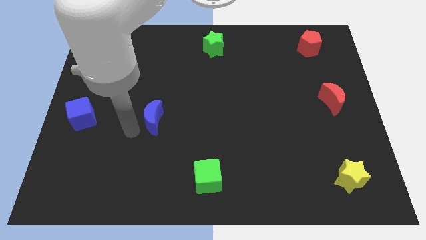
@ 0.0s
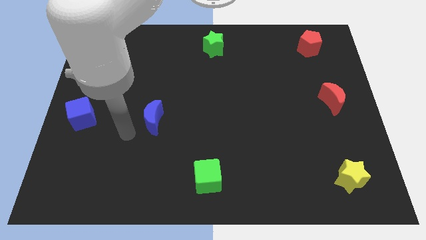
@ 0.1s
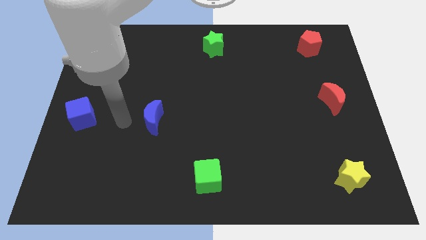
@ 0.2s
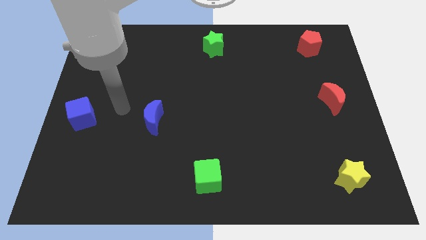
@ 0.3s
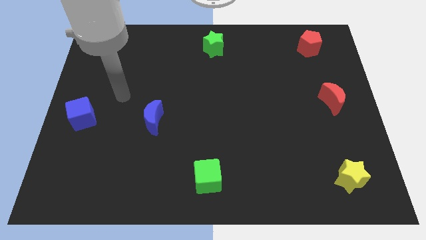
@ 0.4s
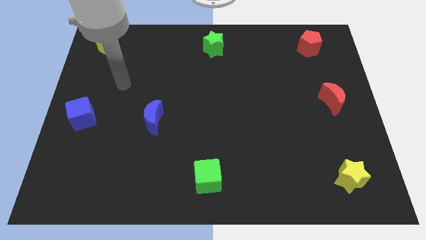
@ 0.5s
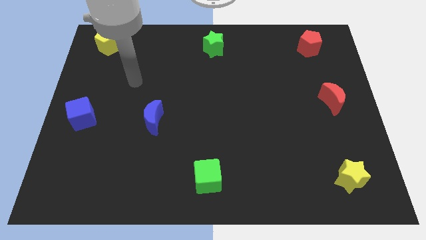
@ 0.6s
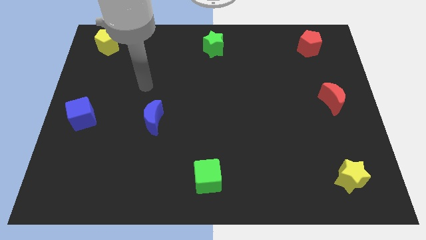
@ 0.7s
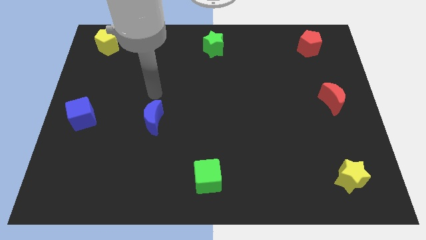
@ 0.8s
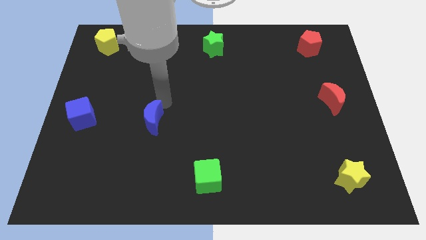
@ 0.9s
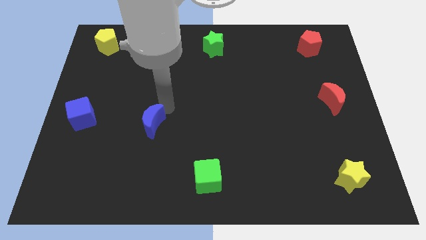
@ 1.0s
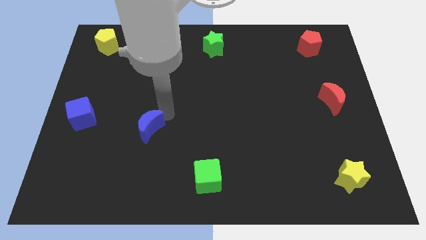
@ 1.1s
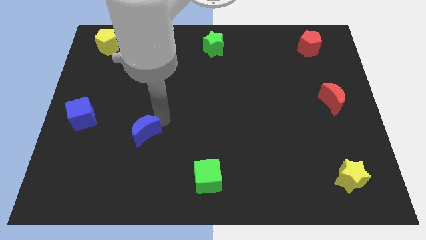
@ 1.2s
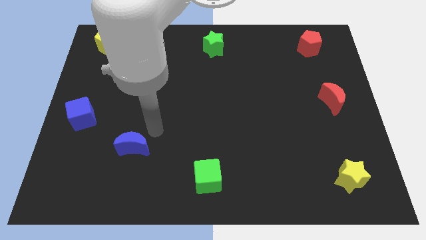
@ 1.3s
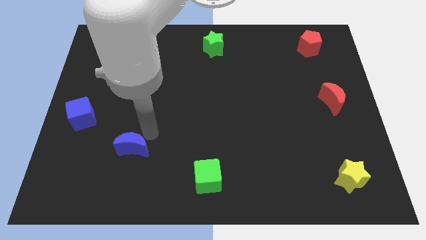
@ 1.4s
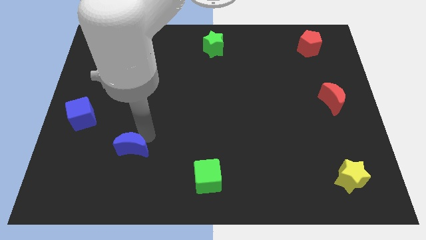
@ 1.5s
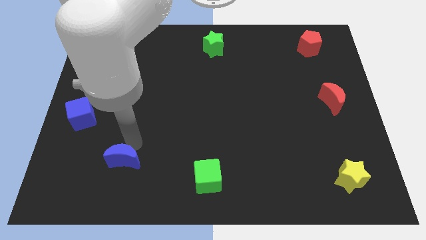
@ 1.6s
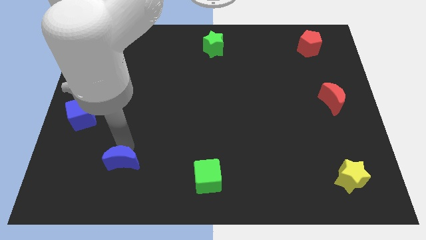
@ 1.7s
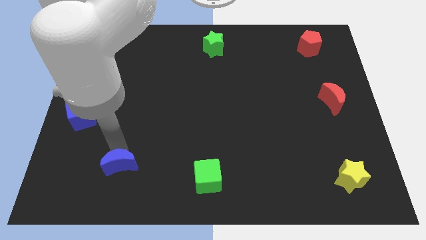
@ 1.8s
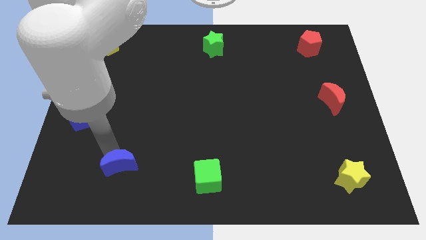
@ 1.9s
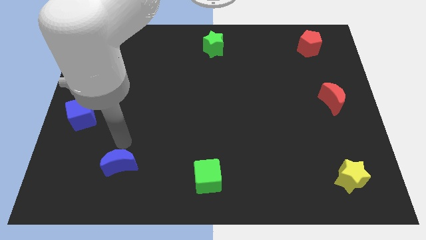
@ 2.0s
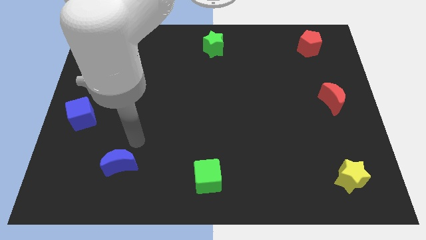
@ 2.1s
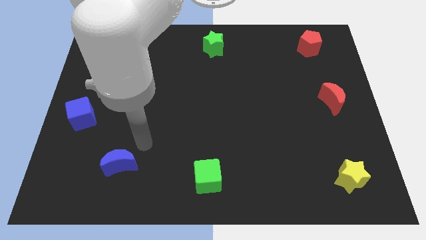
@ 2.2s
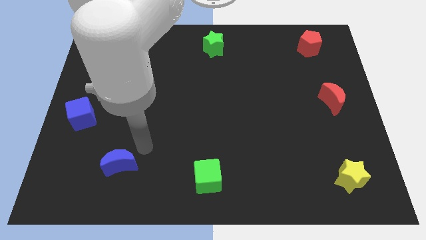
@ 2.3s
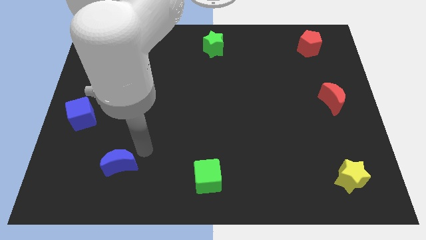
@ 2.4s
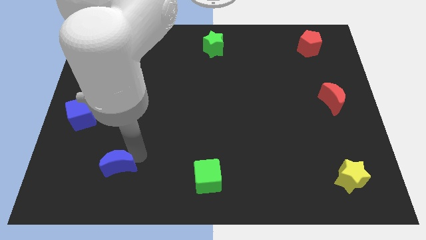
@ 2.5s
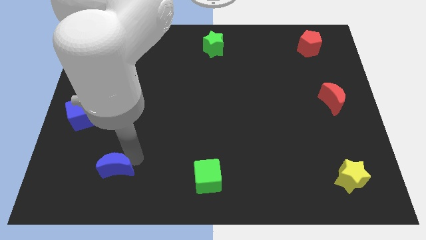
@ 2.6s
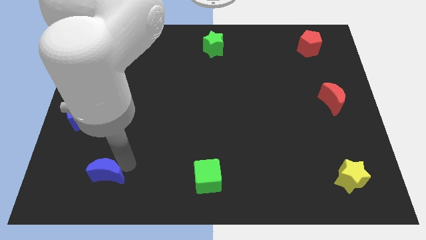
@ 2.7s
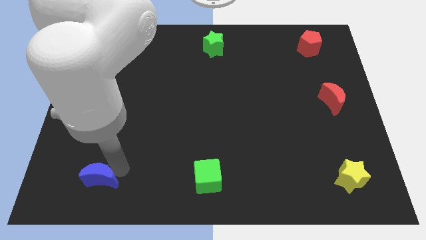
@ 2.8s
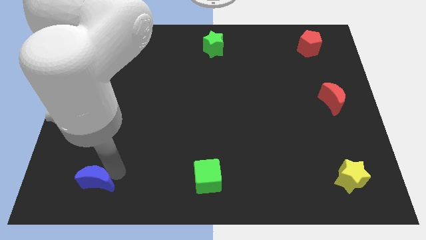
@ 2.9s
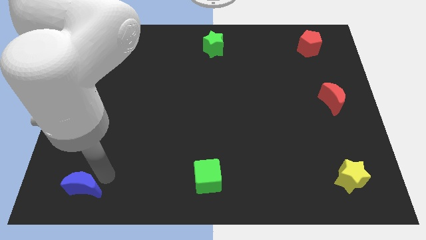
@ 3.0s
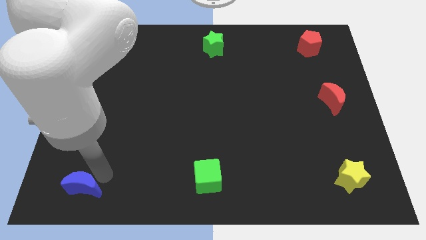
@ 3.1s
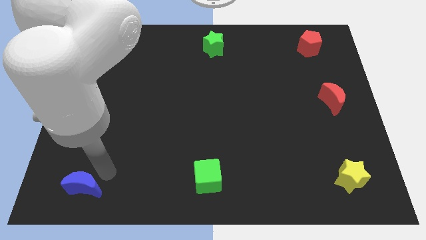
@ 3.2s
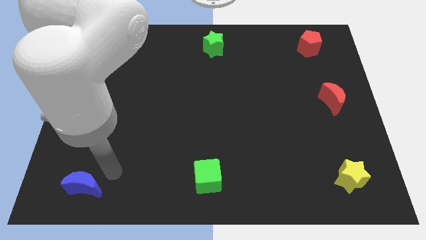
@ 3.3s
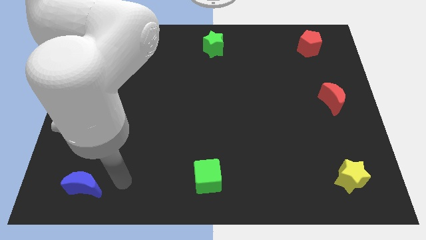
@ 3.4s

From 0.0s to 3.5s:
push the blue crescent to the bottom left

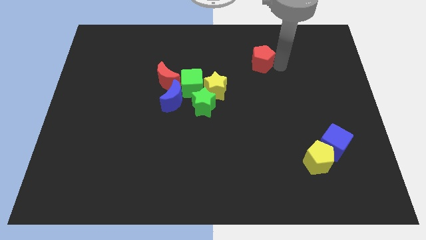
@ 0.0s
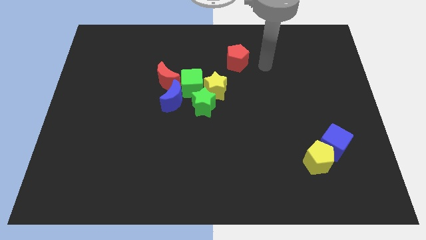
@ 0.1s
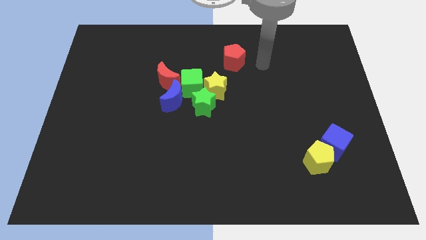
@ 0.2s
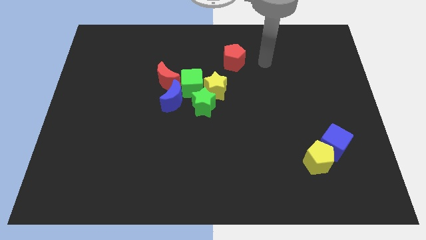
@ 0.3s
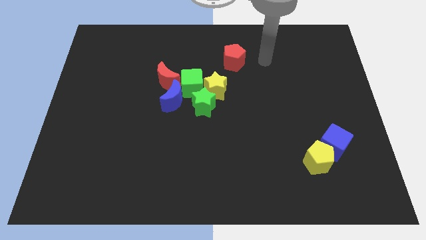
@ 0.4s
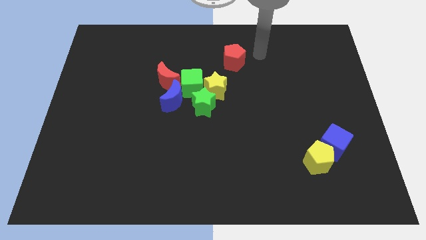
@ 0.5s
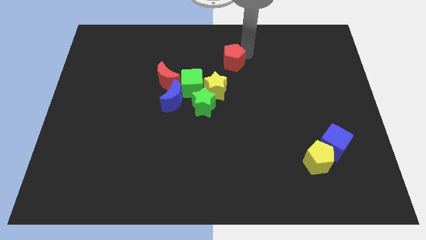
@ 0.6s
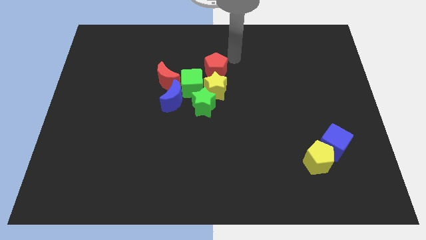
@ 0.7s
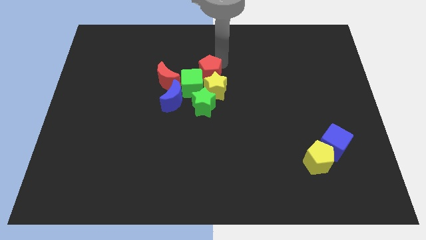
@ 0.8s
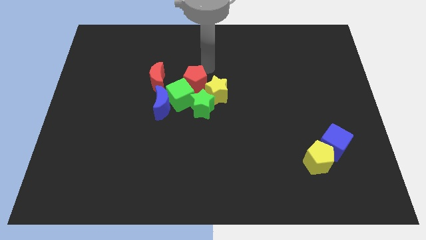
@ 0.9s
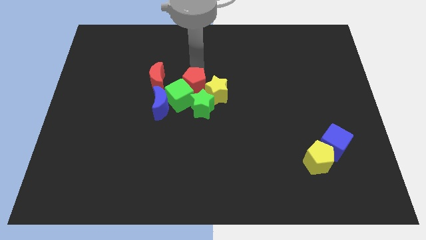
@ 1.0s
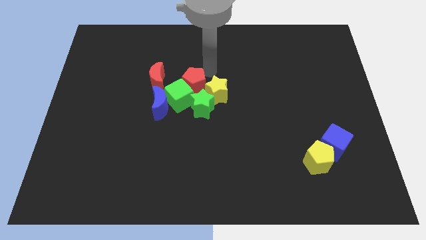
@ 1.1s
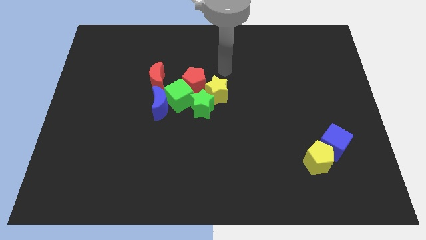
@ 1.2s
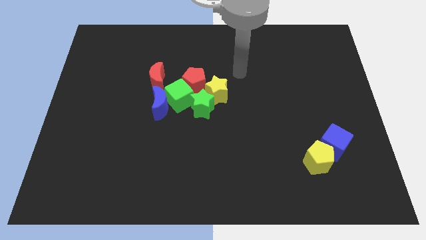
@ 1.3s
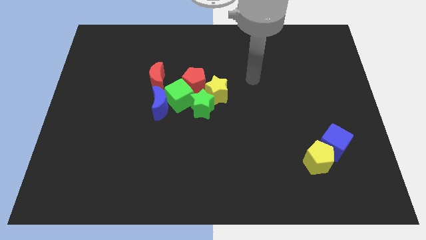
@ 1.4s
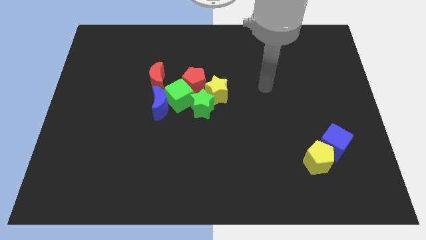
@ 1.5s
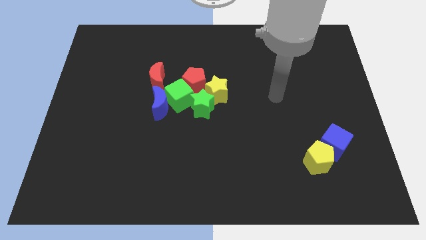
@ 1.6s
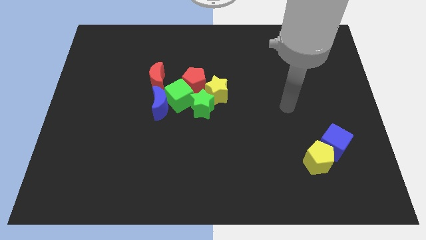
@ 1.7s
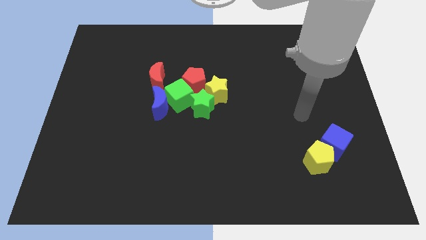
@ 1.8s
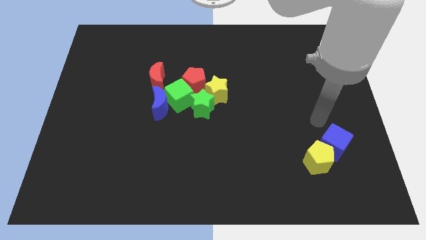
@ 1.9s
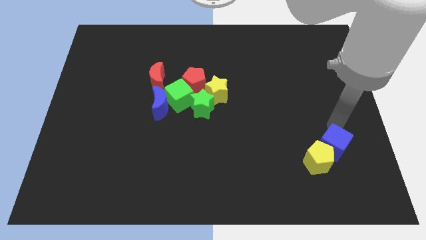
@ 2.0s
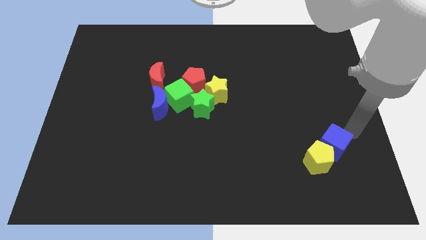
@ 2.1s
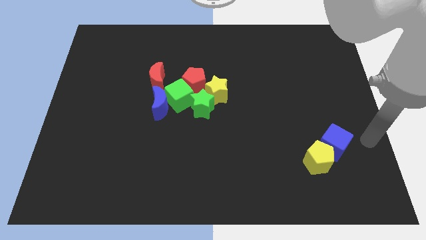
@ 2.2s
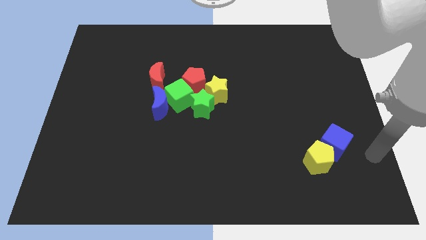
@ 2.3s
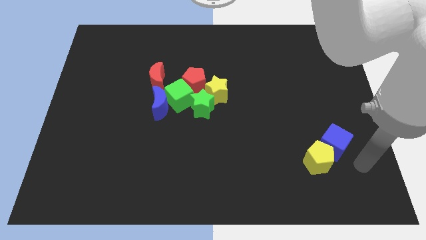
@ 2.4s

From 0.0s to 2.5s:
push the red pentagon into the green cube

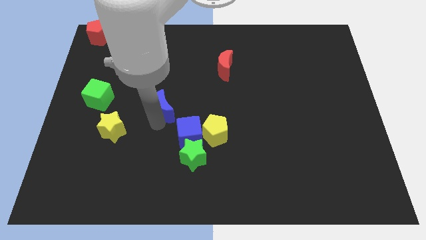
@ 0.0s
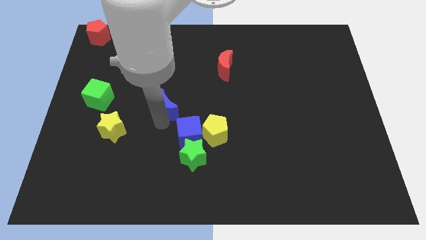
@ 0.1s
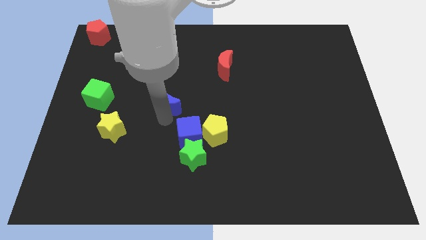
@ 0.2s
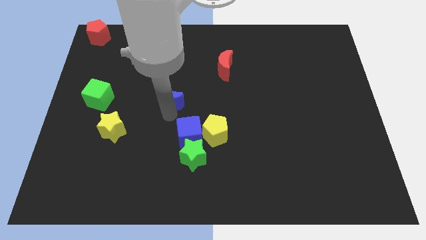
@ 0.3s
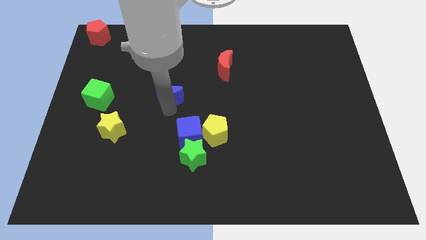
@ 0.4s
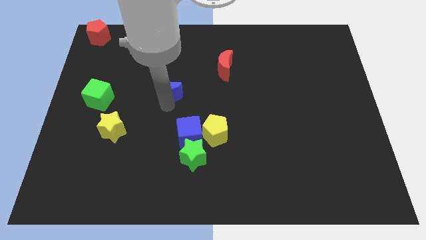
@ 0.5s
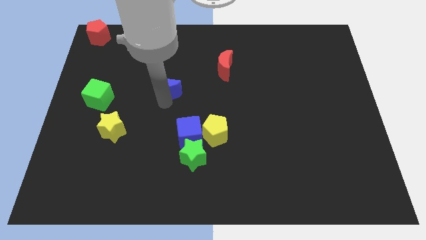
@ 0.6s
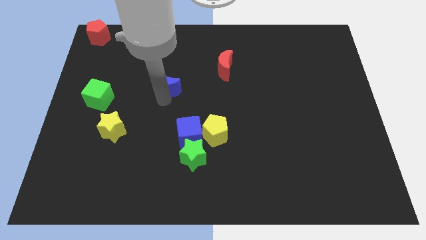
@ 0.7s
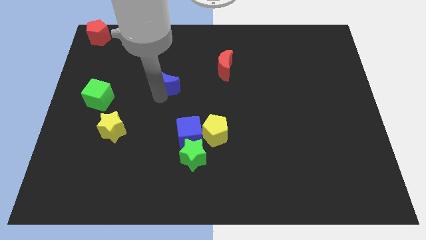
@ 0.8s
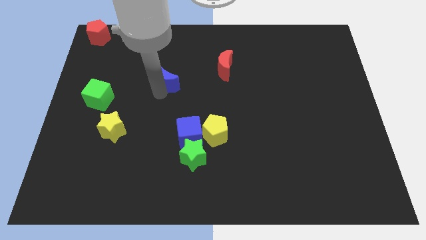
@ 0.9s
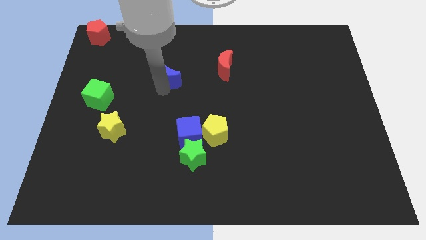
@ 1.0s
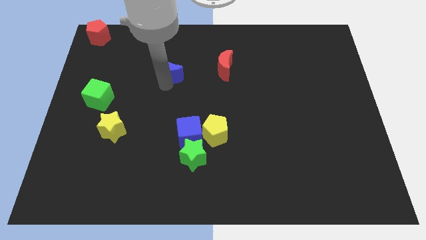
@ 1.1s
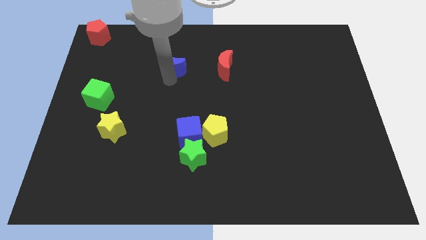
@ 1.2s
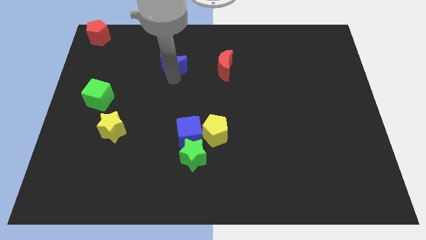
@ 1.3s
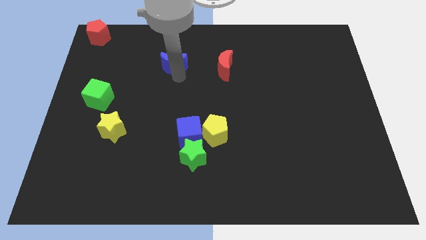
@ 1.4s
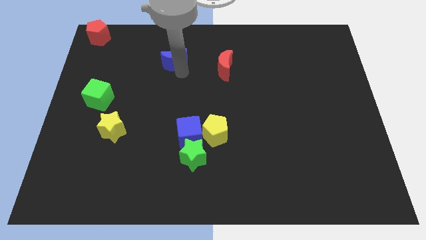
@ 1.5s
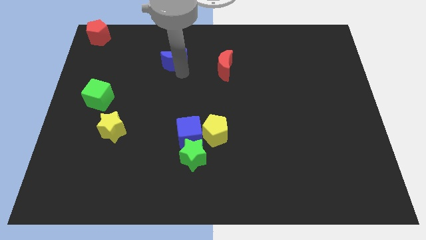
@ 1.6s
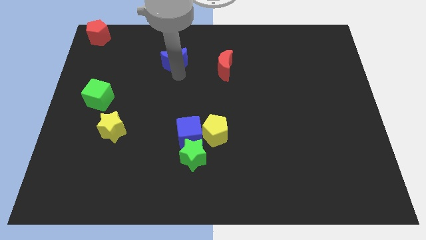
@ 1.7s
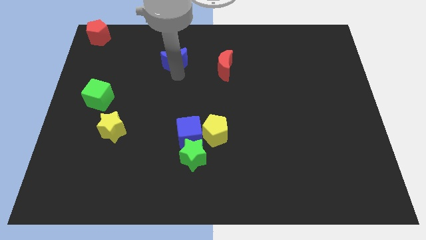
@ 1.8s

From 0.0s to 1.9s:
push blue moon towards top

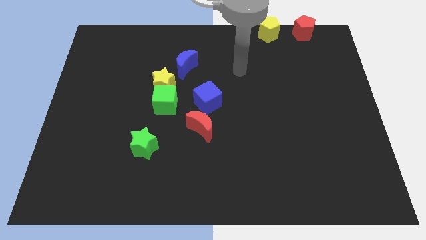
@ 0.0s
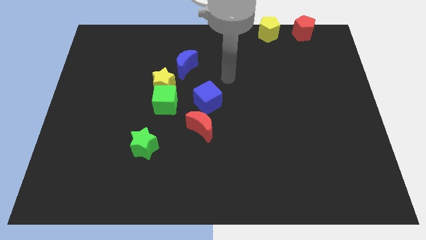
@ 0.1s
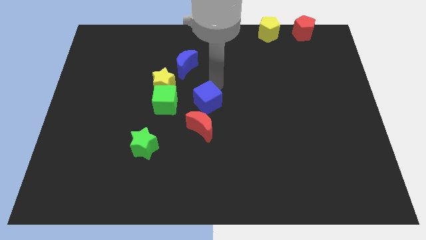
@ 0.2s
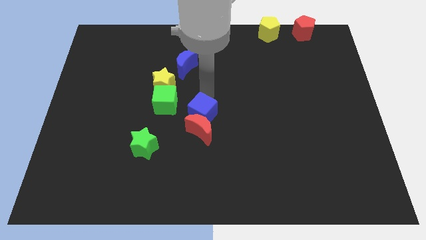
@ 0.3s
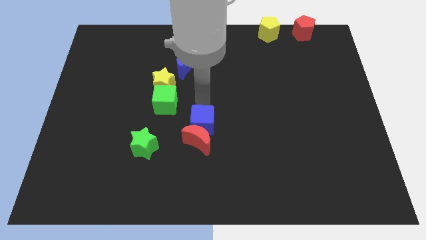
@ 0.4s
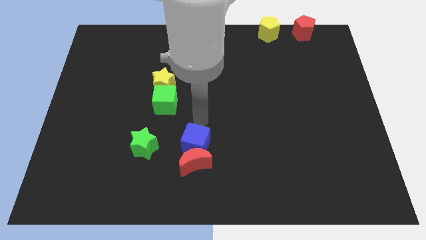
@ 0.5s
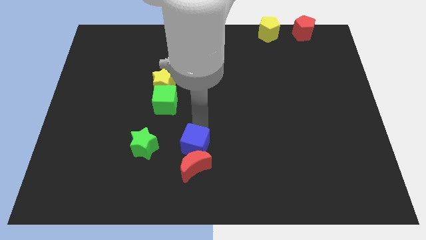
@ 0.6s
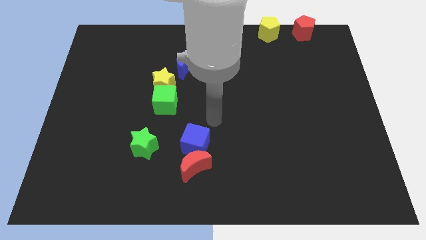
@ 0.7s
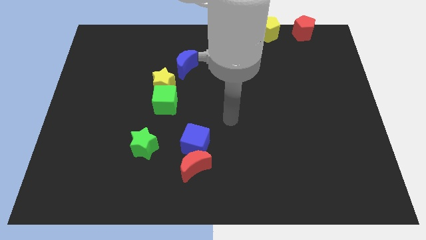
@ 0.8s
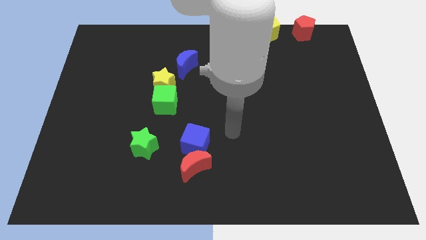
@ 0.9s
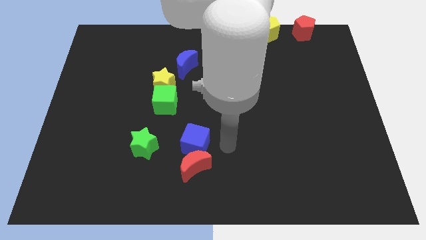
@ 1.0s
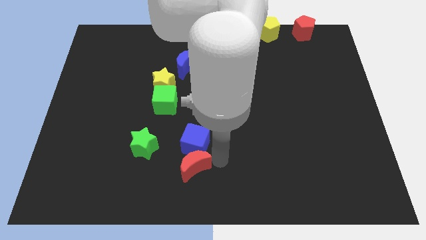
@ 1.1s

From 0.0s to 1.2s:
push the blue cube and red crescent to the right side of the green star

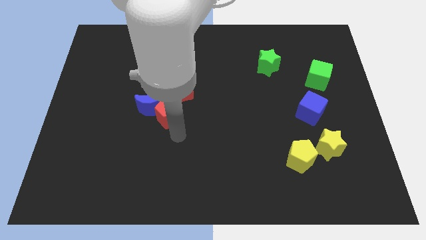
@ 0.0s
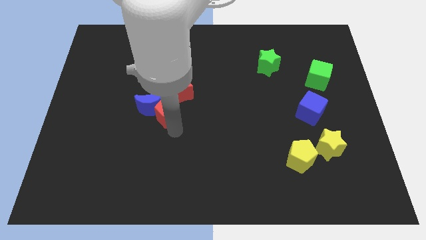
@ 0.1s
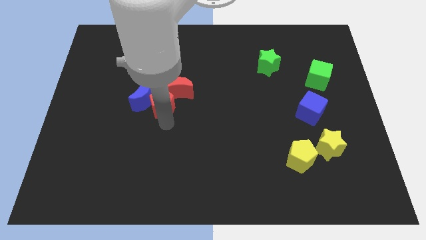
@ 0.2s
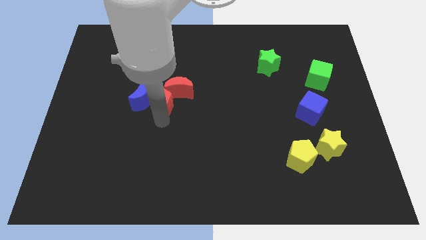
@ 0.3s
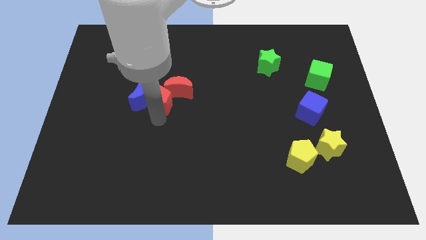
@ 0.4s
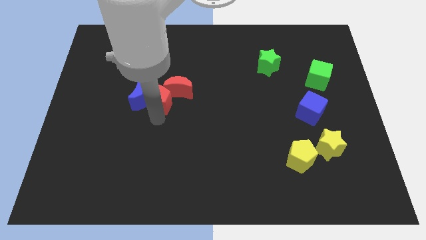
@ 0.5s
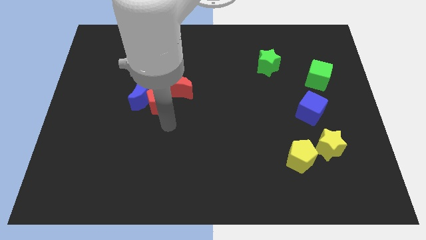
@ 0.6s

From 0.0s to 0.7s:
push red pentagon slightly upwards
